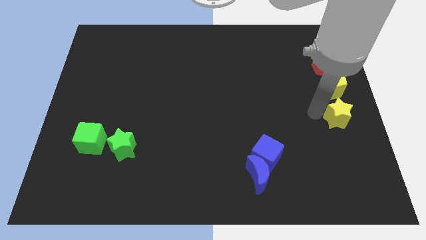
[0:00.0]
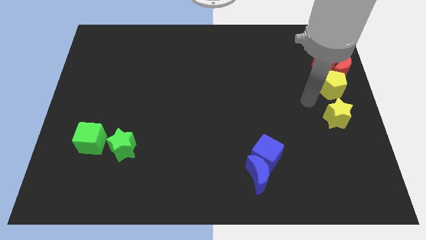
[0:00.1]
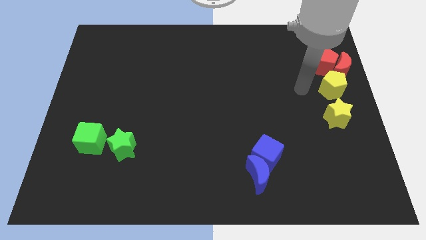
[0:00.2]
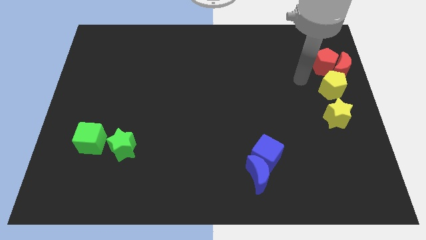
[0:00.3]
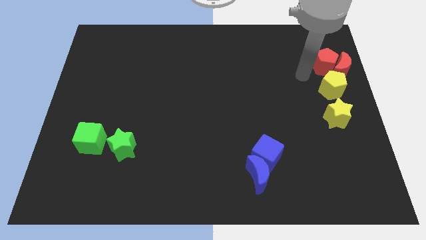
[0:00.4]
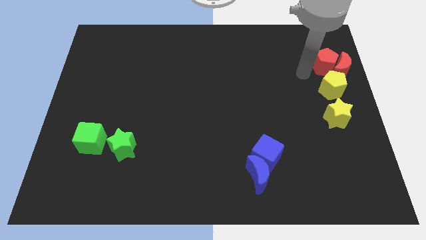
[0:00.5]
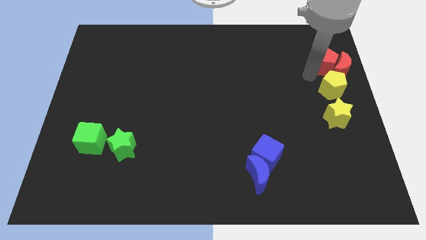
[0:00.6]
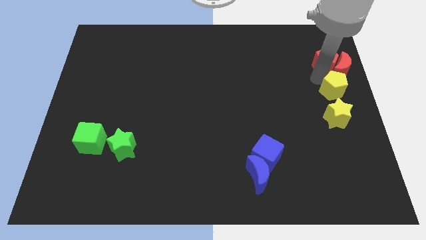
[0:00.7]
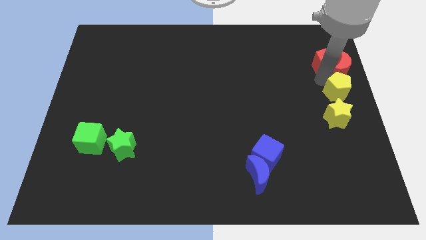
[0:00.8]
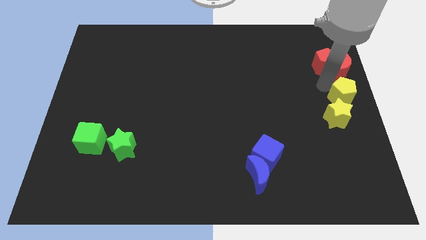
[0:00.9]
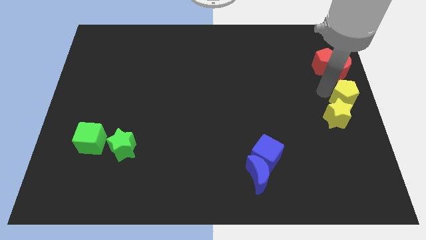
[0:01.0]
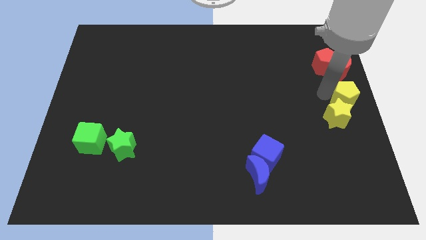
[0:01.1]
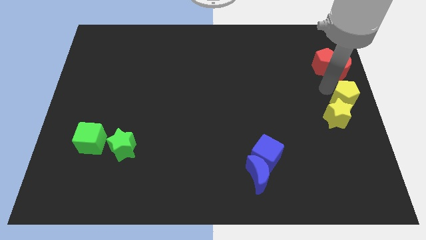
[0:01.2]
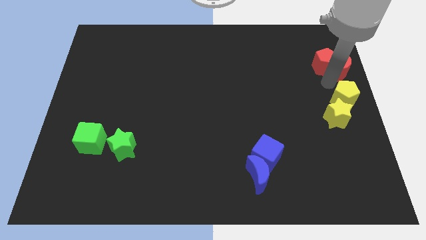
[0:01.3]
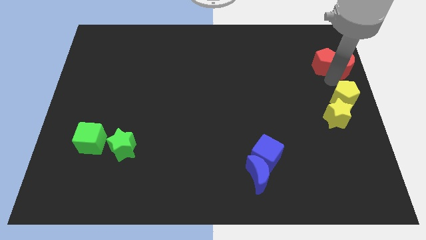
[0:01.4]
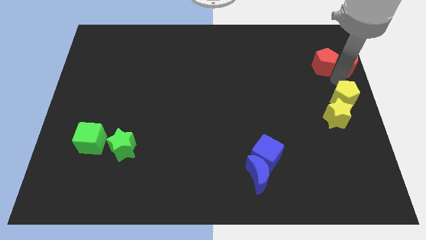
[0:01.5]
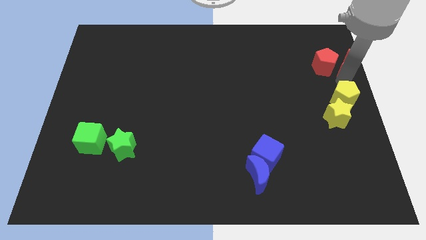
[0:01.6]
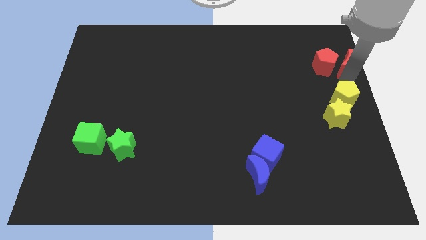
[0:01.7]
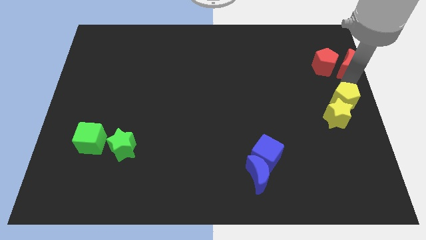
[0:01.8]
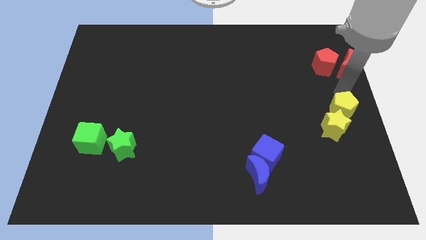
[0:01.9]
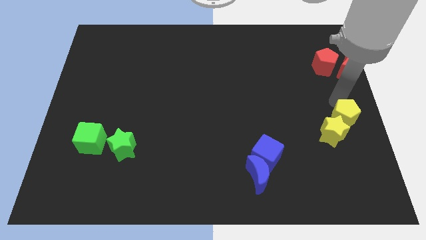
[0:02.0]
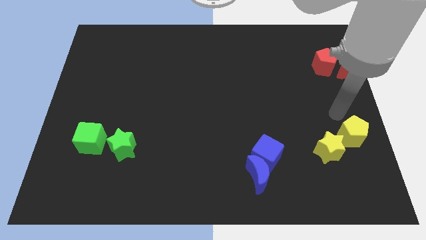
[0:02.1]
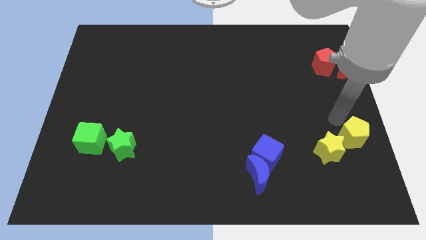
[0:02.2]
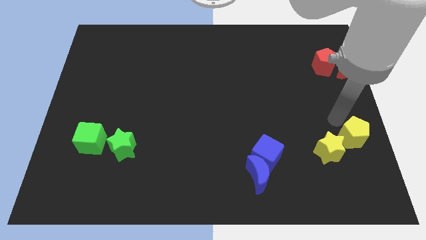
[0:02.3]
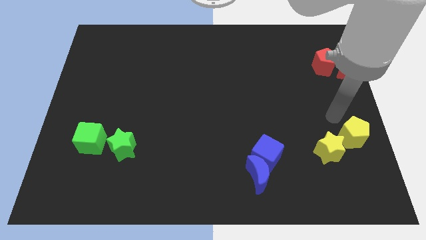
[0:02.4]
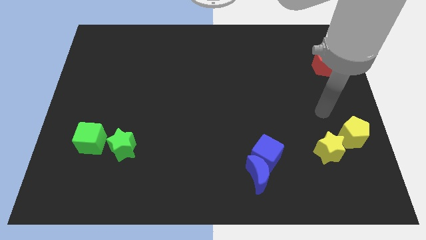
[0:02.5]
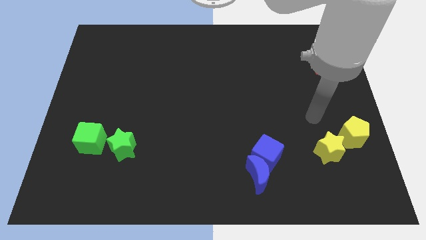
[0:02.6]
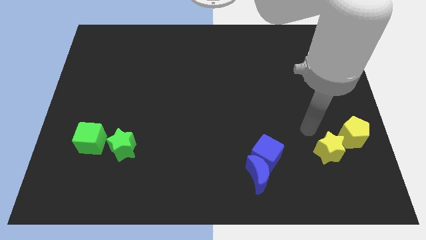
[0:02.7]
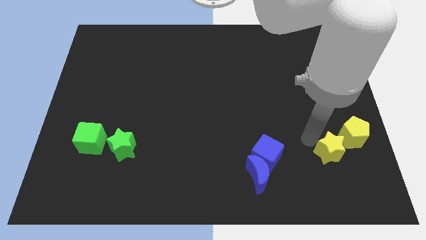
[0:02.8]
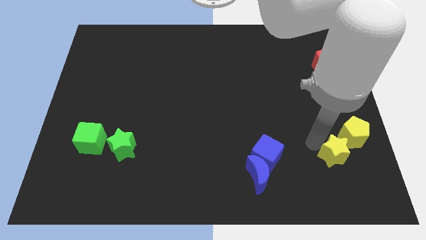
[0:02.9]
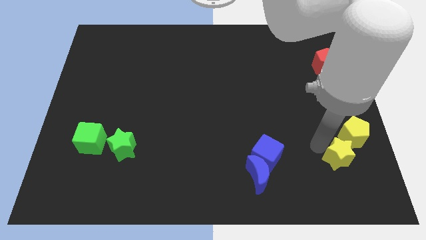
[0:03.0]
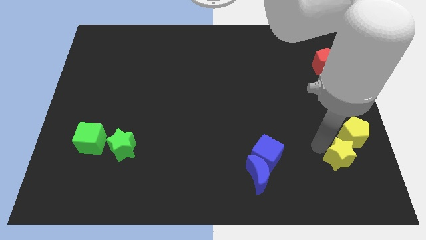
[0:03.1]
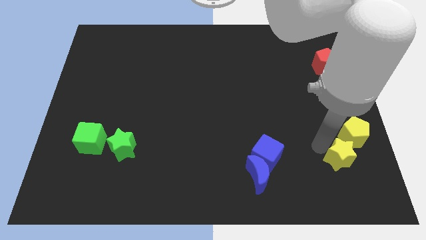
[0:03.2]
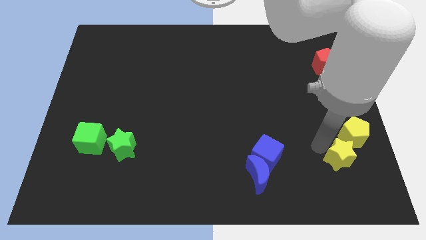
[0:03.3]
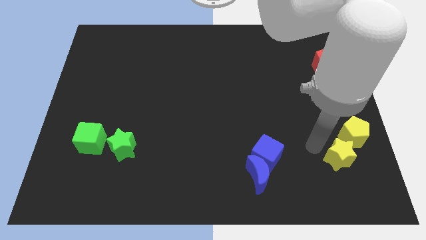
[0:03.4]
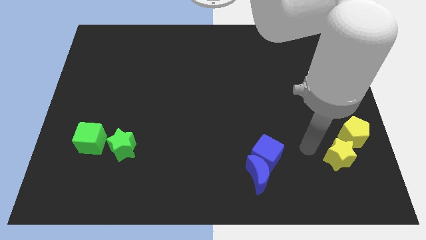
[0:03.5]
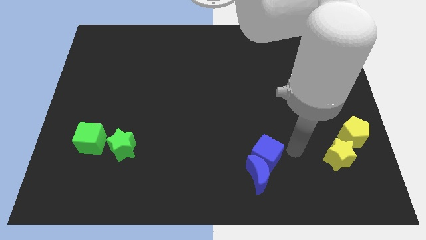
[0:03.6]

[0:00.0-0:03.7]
place yellow star to the bottom left of yellow pentagon

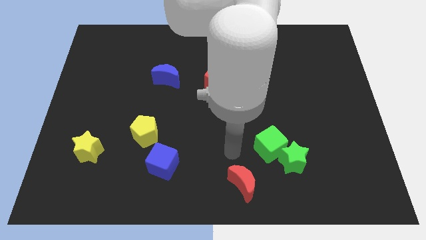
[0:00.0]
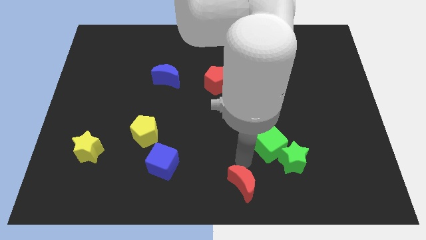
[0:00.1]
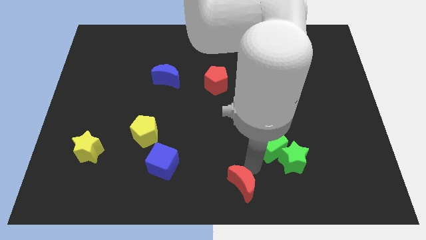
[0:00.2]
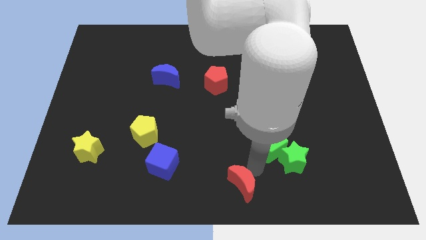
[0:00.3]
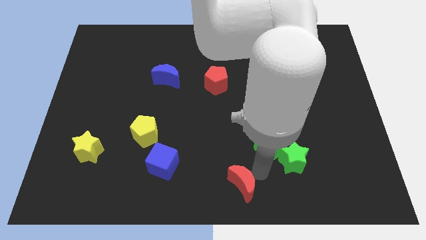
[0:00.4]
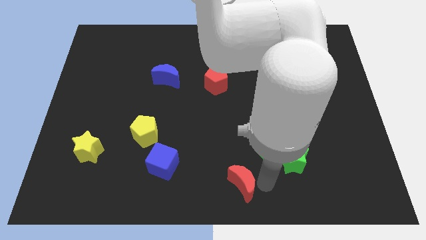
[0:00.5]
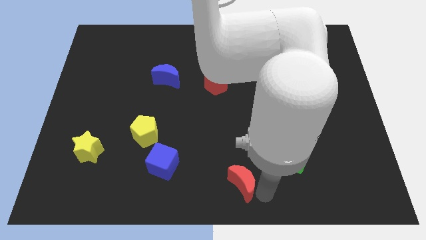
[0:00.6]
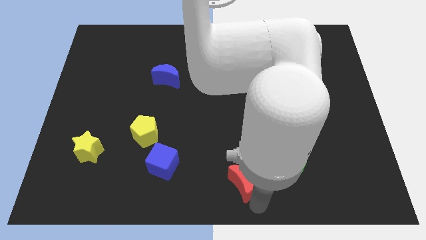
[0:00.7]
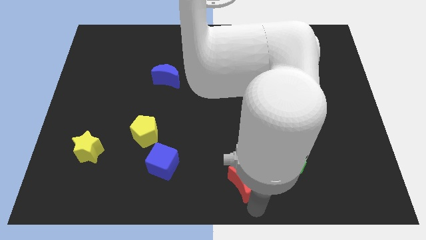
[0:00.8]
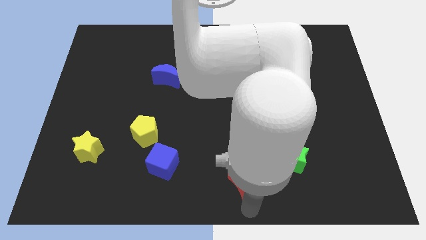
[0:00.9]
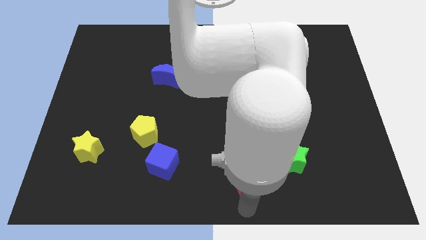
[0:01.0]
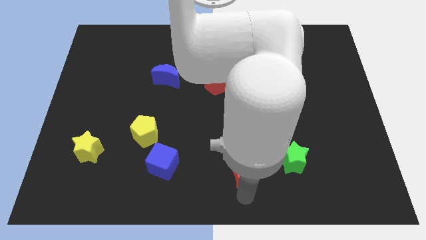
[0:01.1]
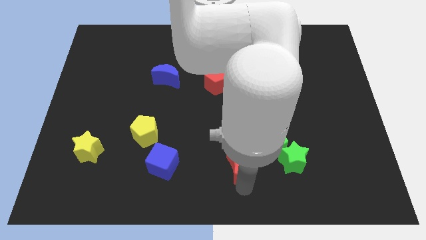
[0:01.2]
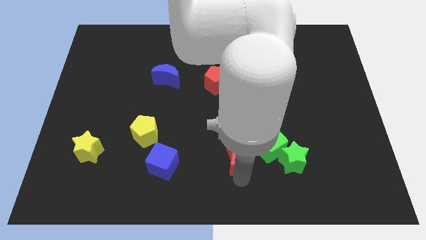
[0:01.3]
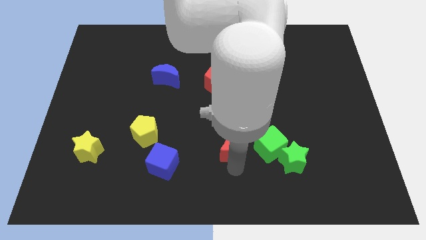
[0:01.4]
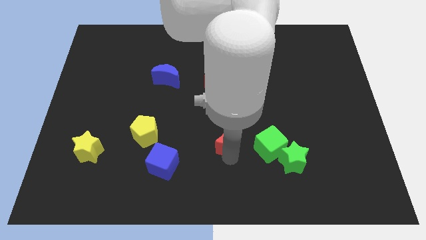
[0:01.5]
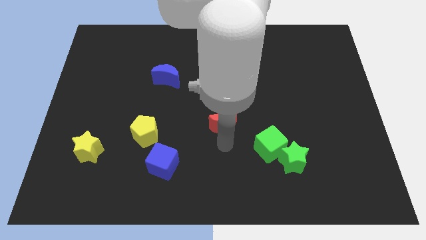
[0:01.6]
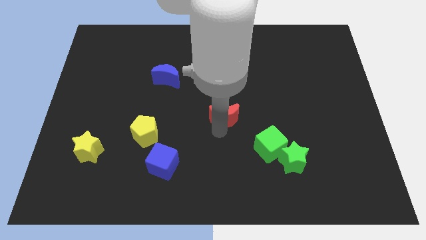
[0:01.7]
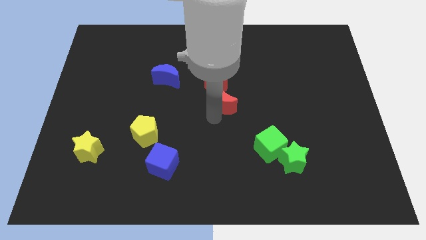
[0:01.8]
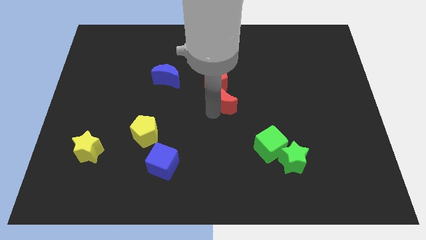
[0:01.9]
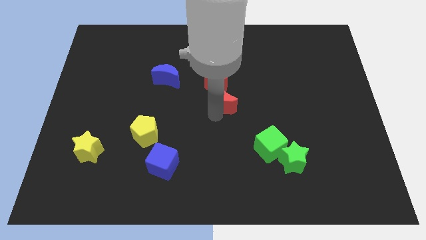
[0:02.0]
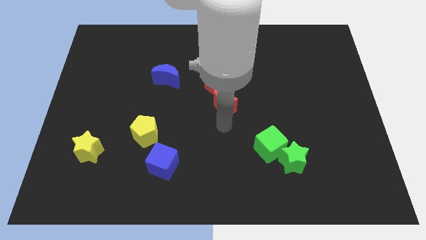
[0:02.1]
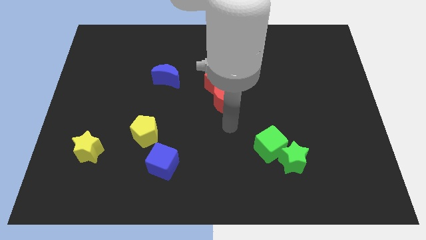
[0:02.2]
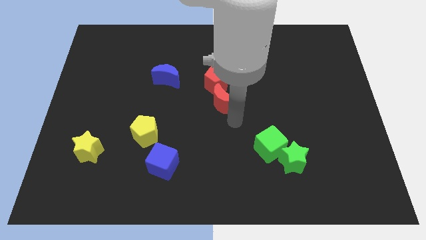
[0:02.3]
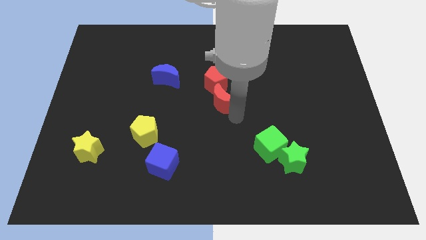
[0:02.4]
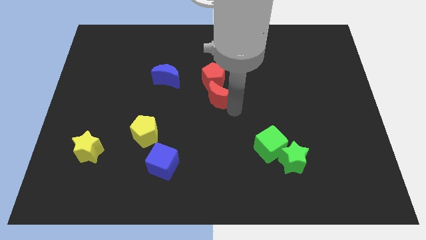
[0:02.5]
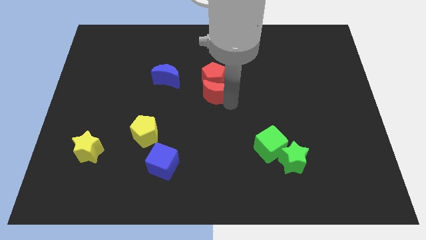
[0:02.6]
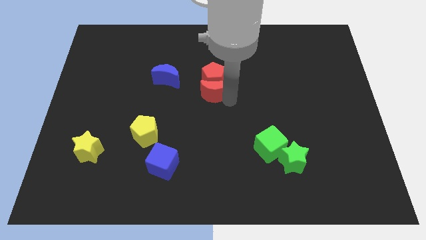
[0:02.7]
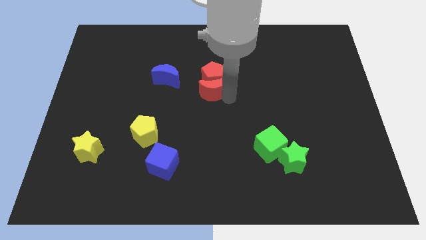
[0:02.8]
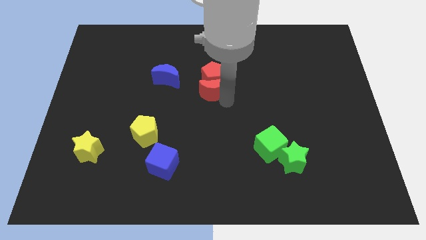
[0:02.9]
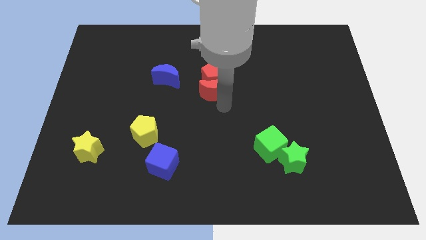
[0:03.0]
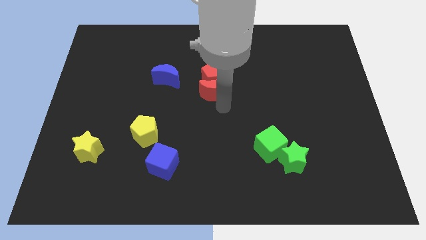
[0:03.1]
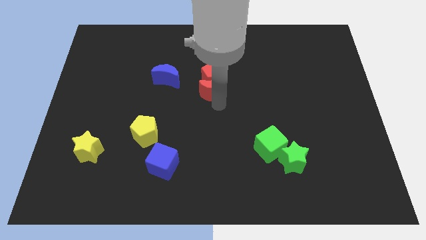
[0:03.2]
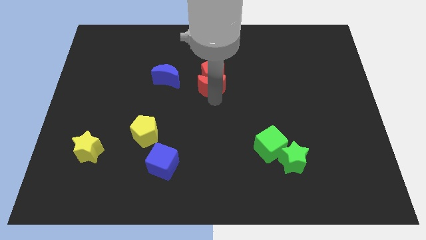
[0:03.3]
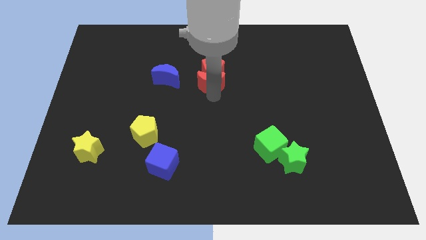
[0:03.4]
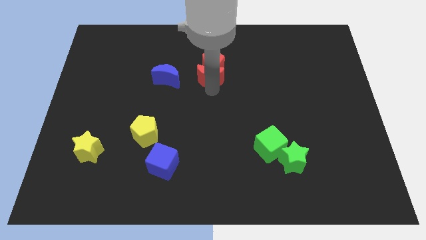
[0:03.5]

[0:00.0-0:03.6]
push the red crescent into the bottom side of the red pentagon

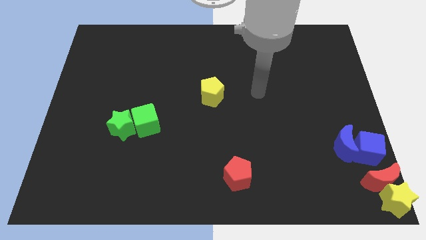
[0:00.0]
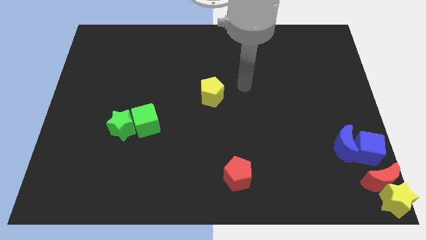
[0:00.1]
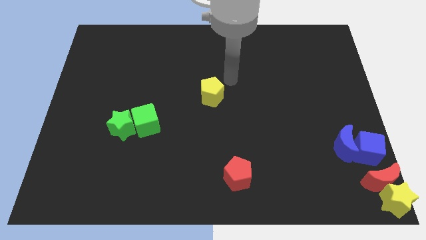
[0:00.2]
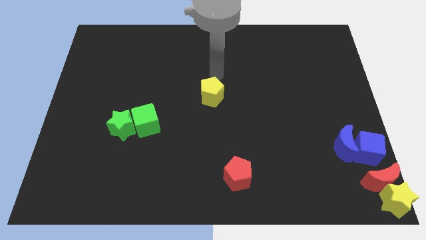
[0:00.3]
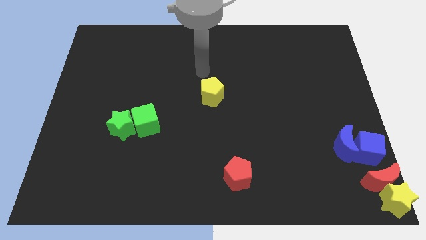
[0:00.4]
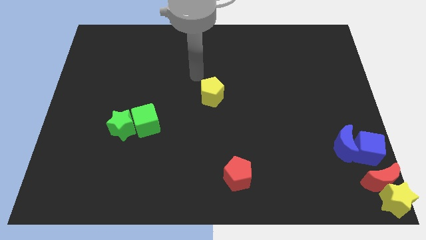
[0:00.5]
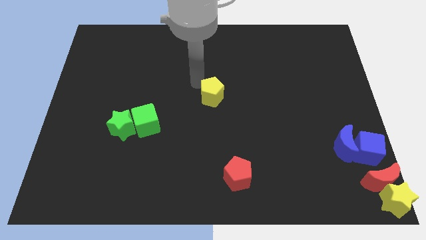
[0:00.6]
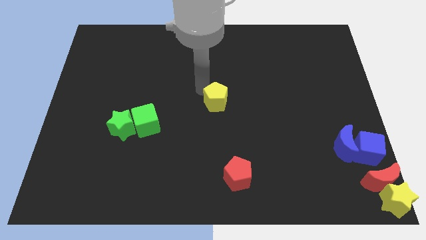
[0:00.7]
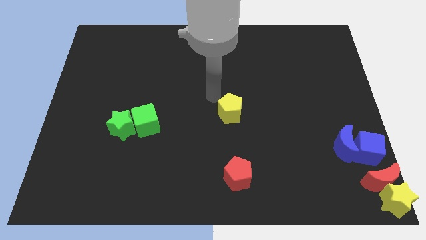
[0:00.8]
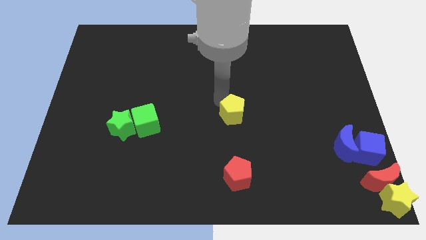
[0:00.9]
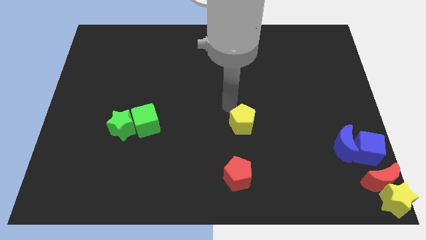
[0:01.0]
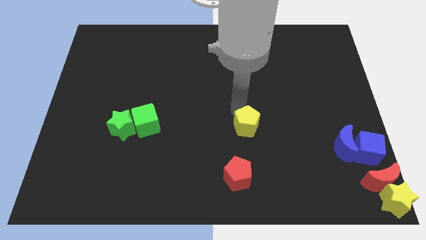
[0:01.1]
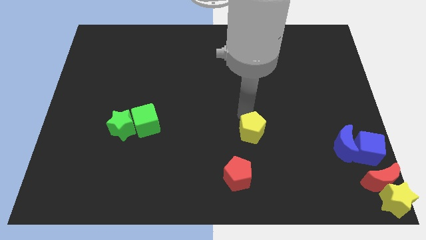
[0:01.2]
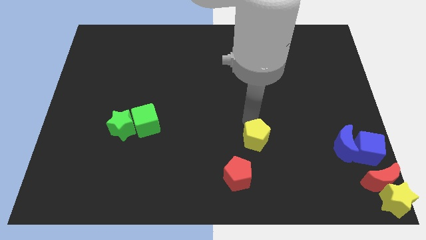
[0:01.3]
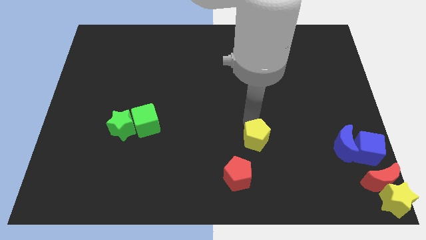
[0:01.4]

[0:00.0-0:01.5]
drag the yellow pentagon diagonally on the top right side of the red pentagon

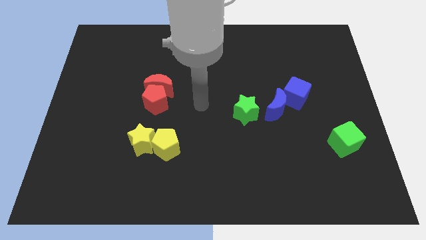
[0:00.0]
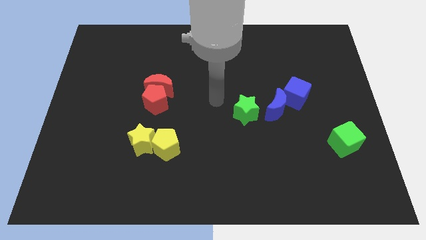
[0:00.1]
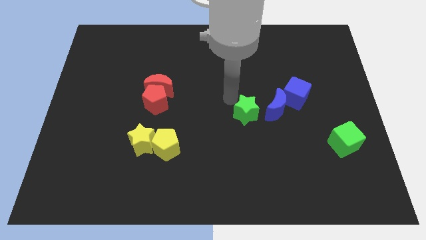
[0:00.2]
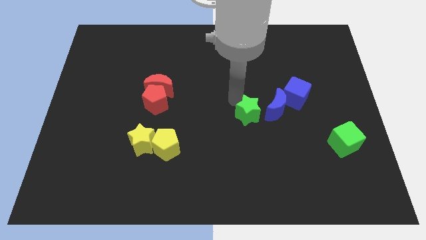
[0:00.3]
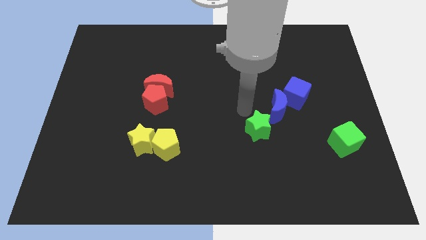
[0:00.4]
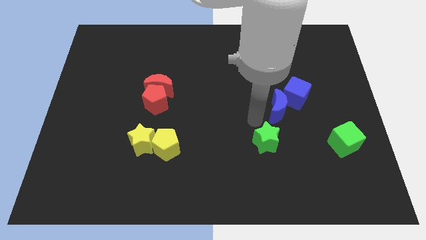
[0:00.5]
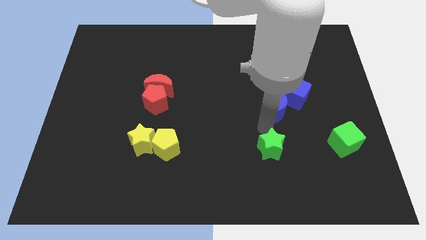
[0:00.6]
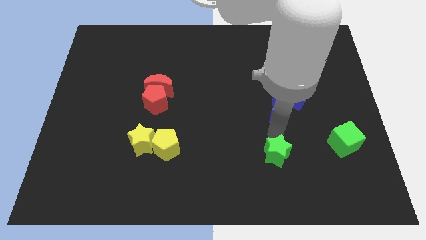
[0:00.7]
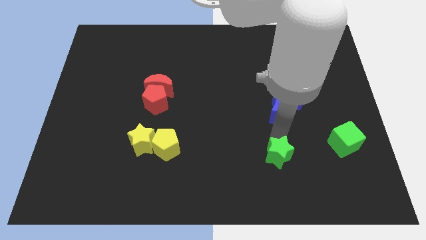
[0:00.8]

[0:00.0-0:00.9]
place the green star to the left of the green cube
